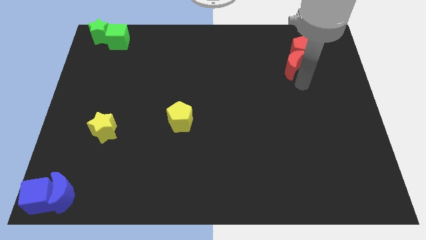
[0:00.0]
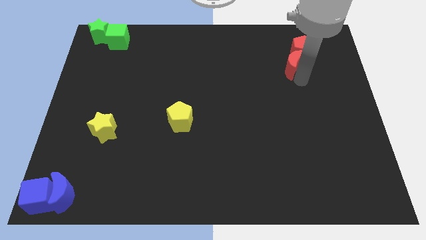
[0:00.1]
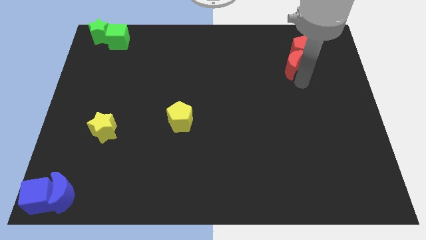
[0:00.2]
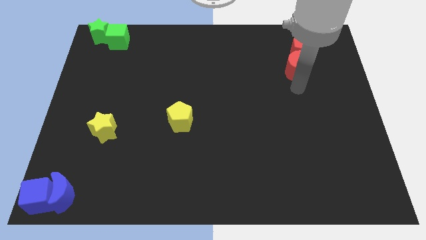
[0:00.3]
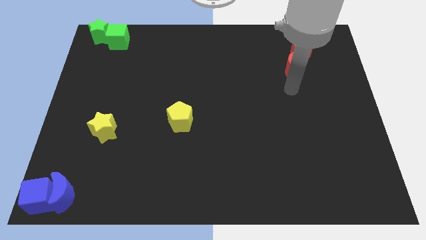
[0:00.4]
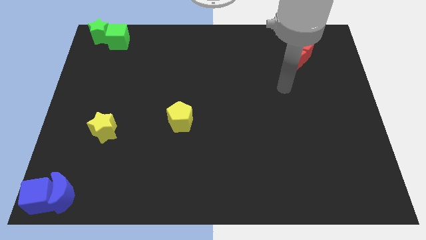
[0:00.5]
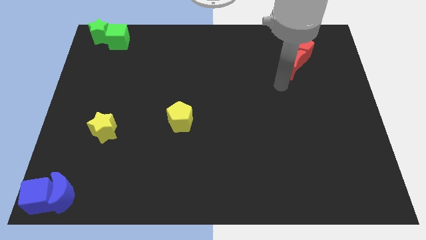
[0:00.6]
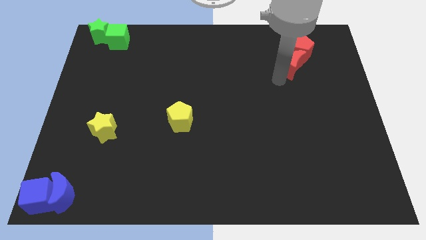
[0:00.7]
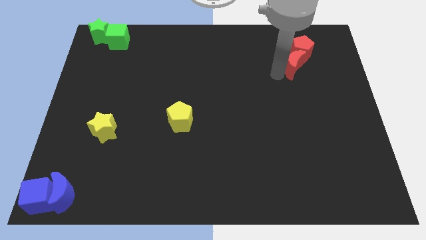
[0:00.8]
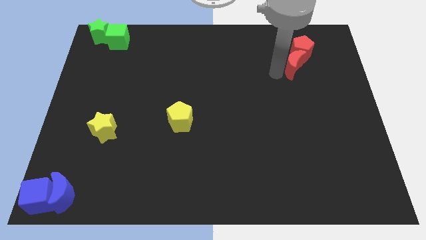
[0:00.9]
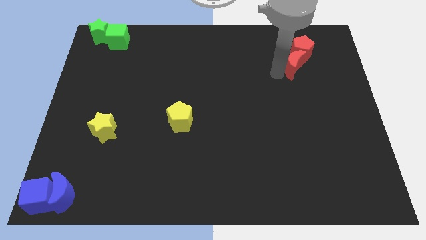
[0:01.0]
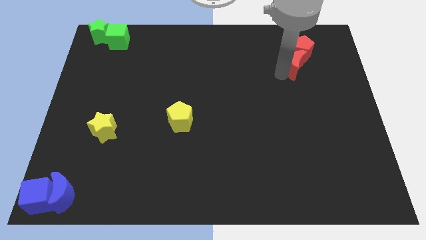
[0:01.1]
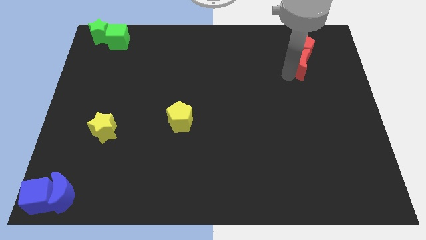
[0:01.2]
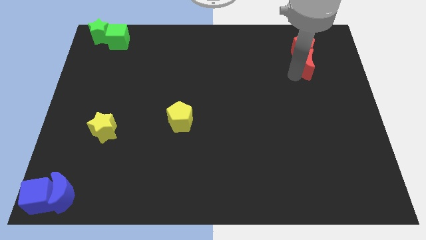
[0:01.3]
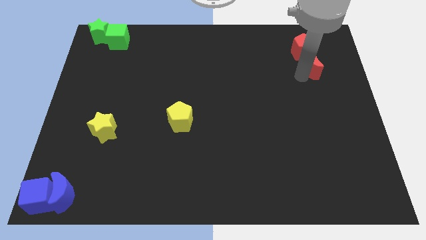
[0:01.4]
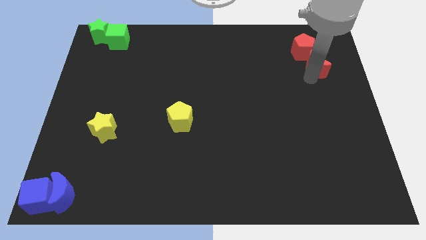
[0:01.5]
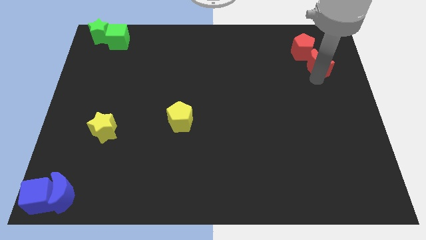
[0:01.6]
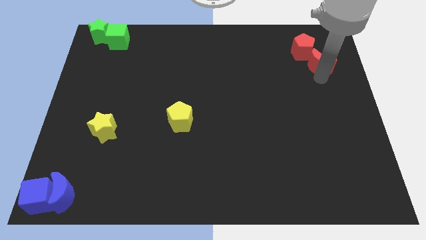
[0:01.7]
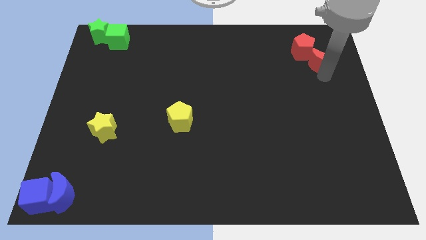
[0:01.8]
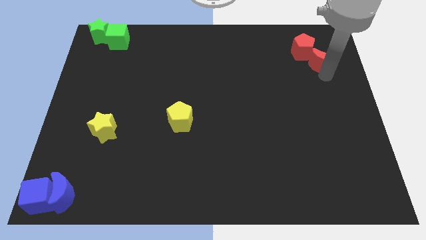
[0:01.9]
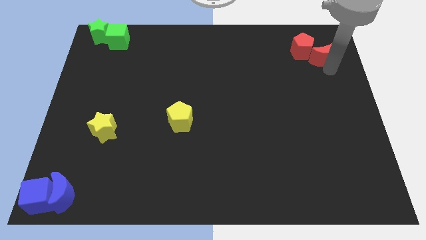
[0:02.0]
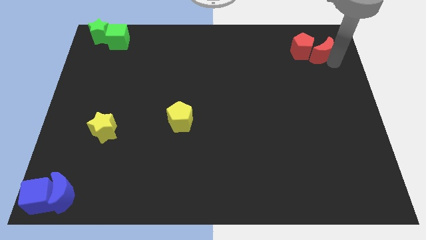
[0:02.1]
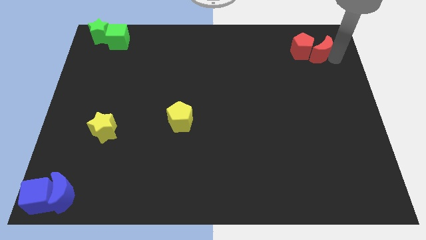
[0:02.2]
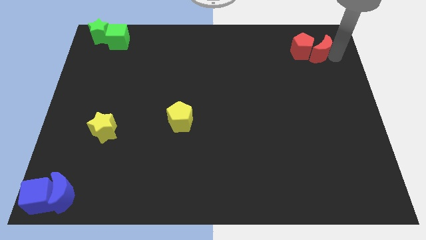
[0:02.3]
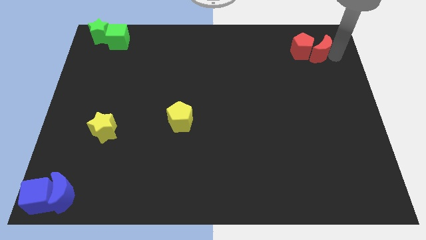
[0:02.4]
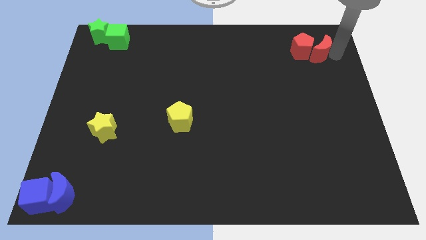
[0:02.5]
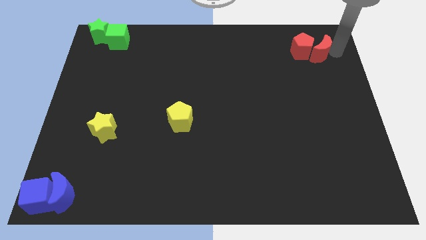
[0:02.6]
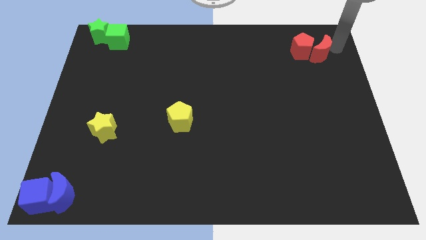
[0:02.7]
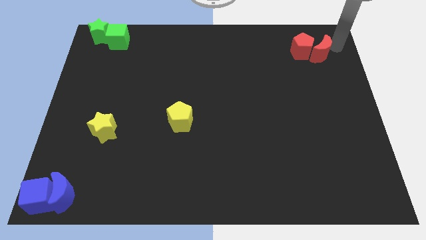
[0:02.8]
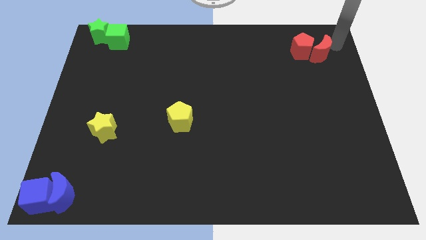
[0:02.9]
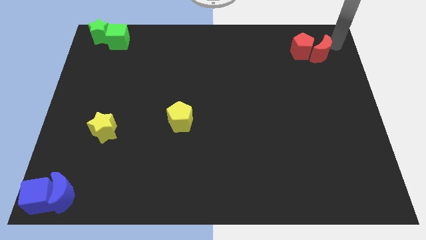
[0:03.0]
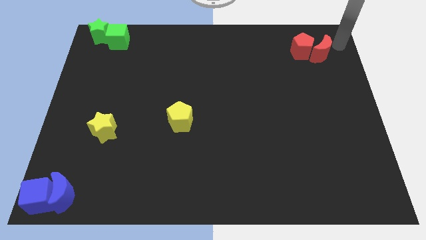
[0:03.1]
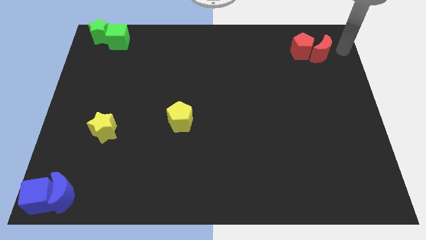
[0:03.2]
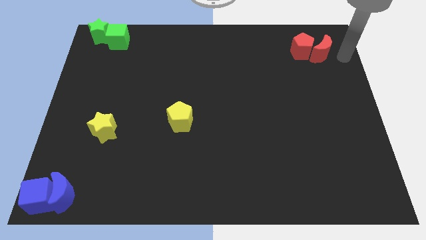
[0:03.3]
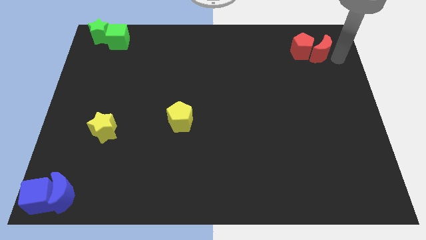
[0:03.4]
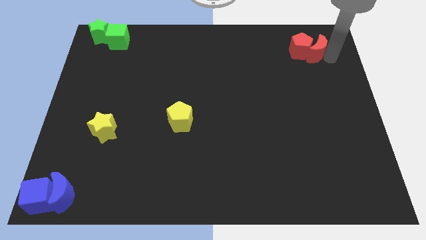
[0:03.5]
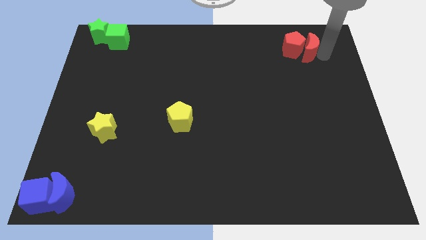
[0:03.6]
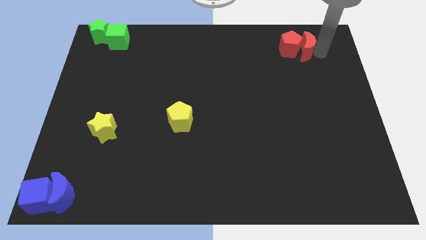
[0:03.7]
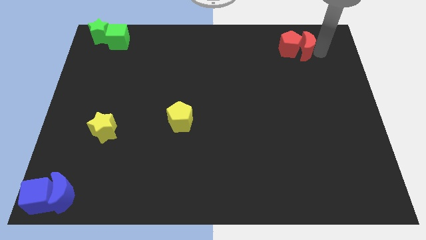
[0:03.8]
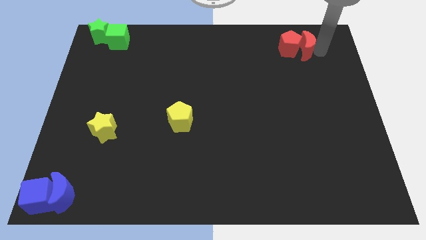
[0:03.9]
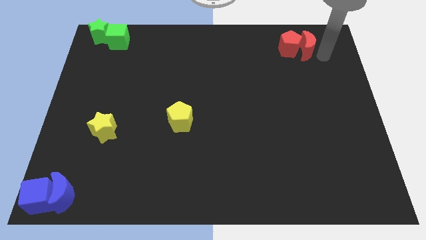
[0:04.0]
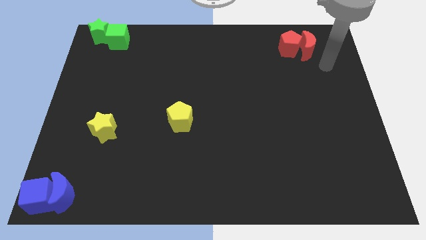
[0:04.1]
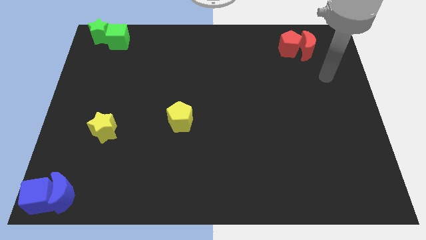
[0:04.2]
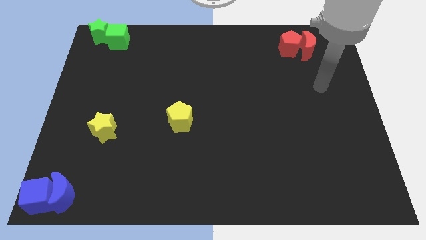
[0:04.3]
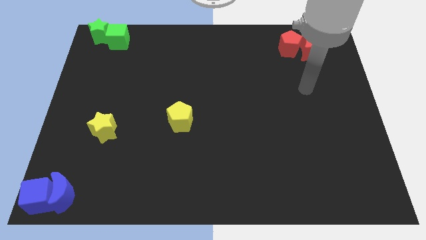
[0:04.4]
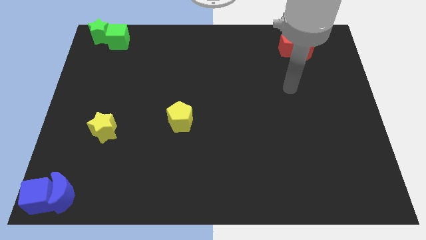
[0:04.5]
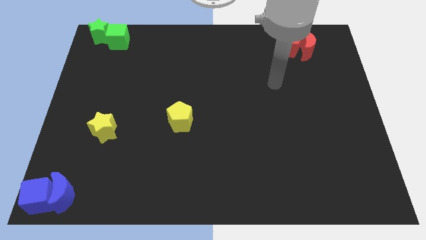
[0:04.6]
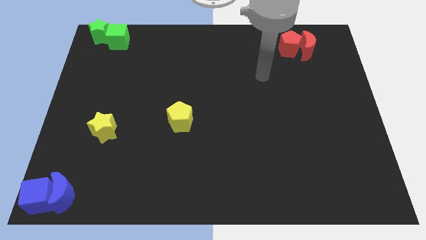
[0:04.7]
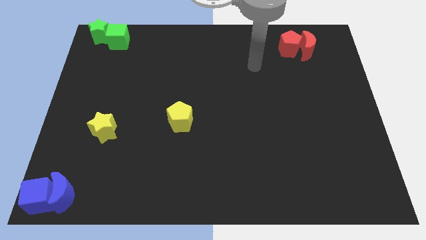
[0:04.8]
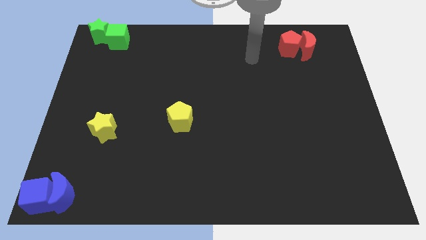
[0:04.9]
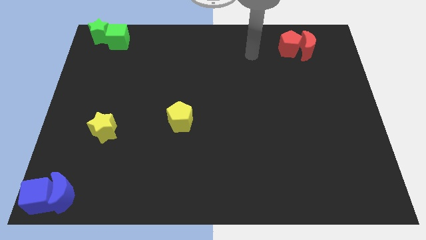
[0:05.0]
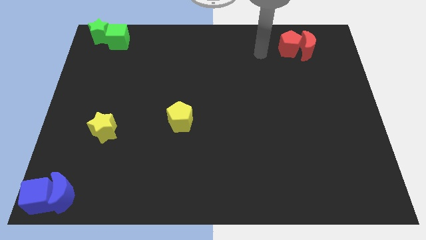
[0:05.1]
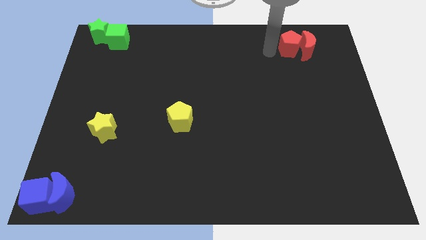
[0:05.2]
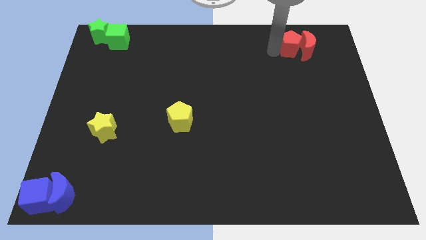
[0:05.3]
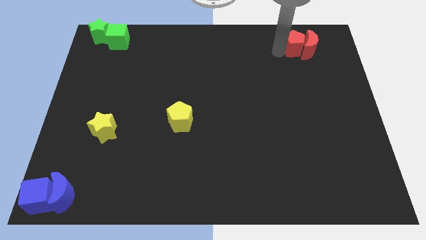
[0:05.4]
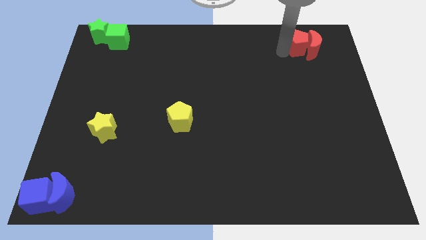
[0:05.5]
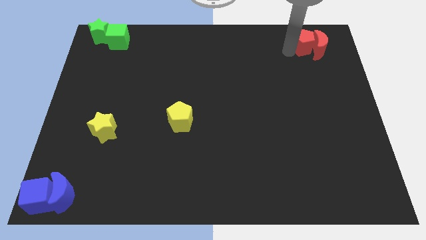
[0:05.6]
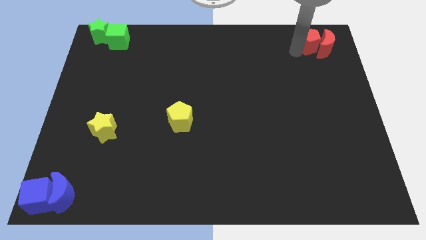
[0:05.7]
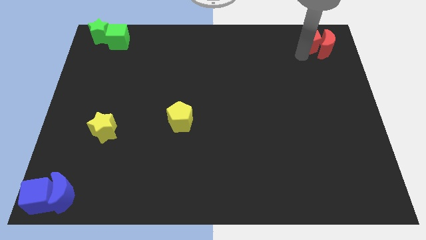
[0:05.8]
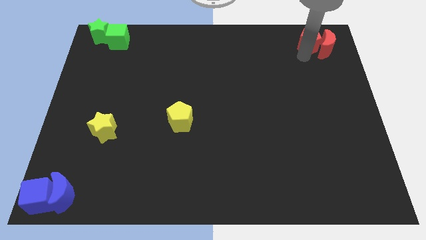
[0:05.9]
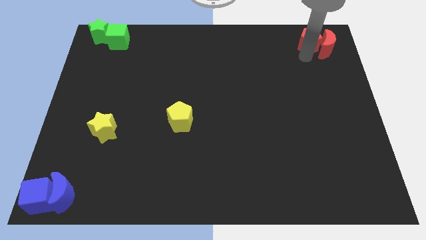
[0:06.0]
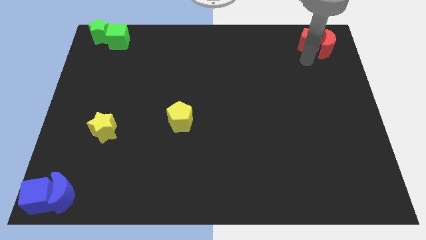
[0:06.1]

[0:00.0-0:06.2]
move red crescent along with the red pentagon to the top right corner of the board

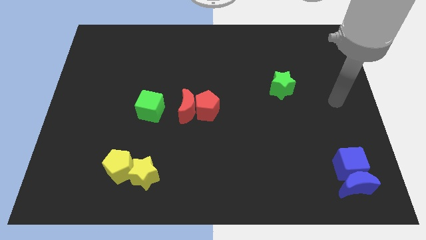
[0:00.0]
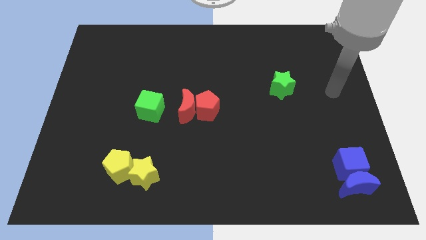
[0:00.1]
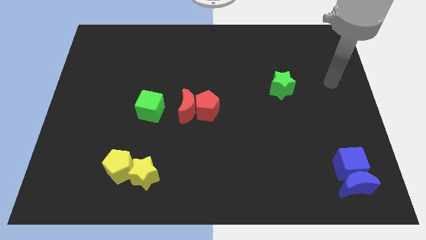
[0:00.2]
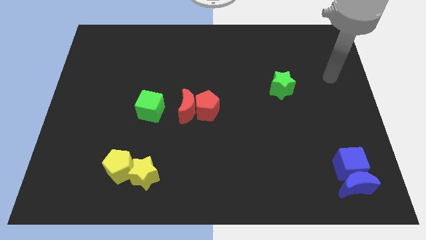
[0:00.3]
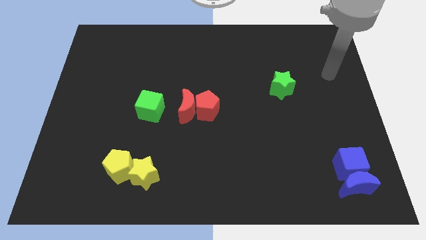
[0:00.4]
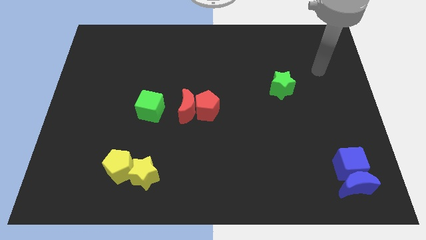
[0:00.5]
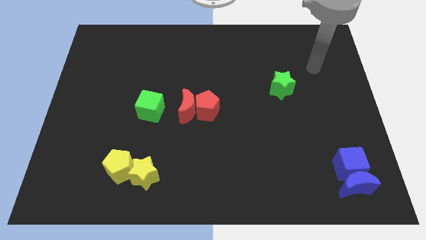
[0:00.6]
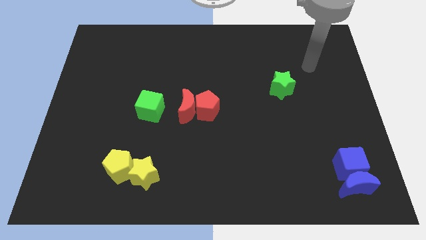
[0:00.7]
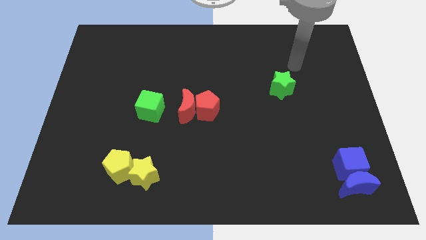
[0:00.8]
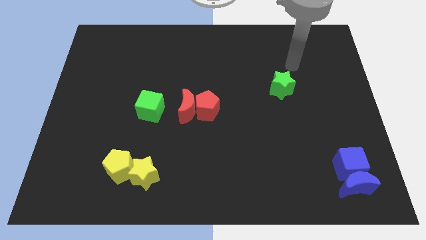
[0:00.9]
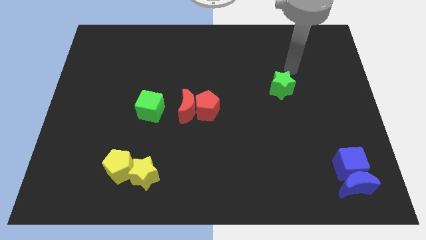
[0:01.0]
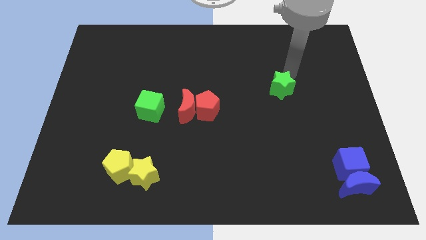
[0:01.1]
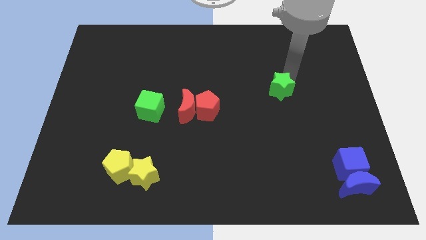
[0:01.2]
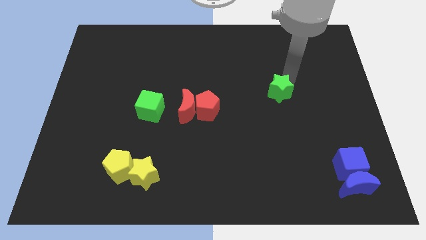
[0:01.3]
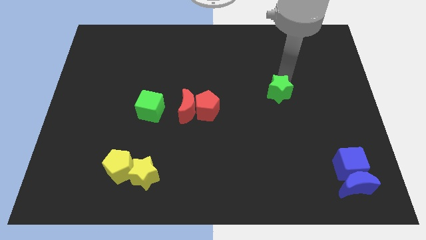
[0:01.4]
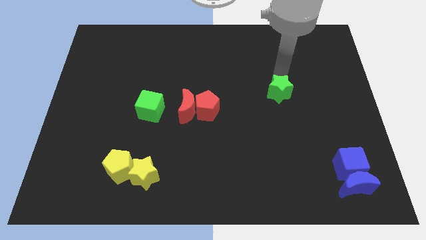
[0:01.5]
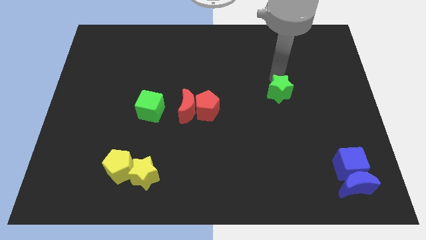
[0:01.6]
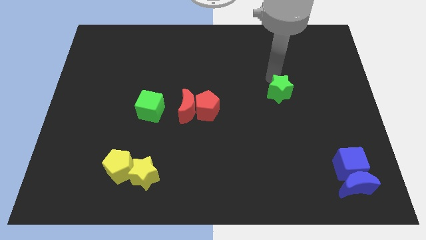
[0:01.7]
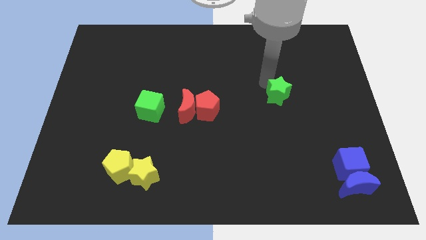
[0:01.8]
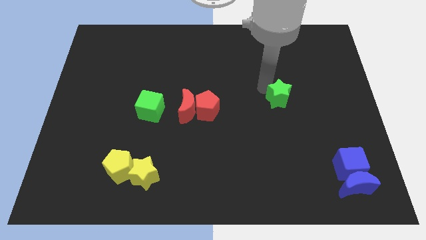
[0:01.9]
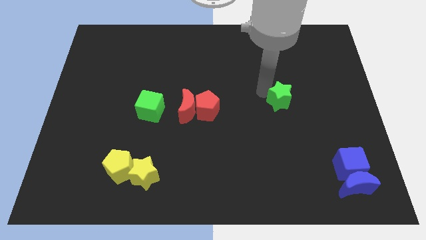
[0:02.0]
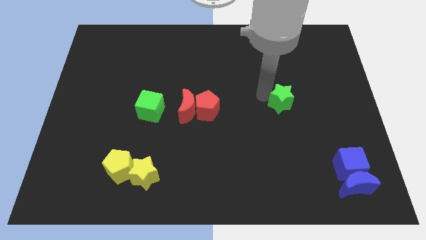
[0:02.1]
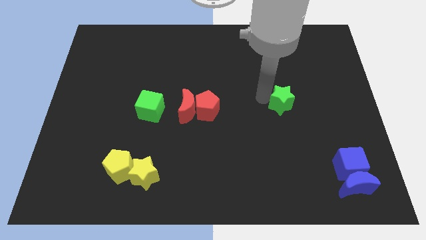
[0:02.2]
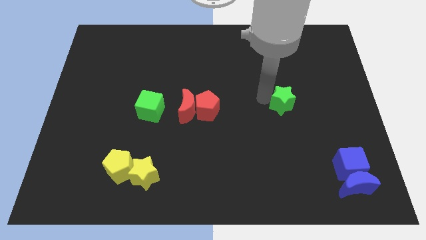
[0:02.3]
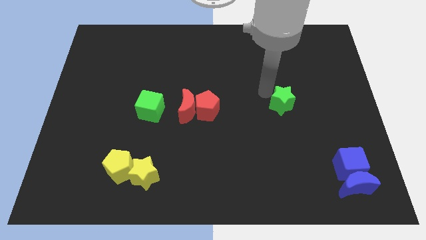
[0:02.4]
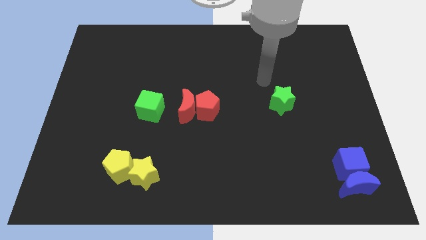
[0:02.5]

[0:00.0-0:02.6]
place the green star right to the red pentagon
